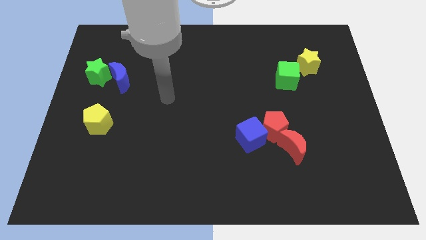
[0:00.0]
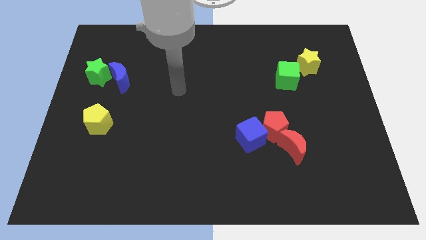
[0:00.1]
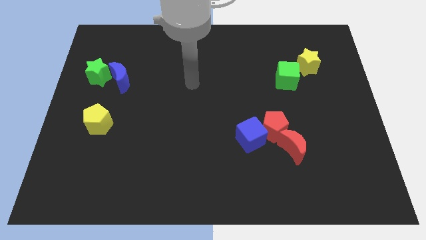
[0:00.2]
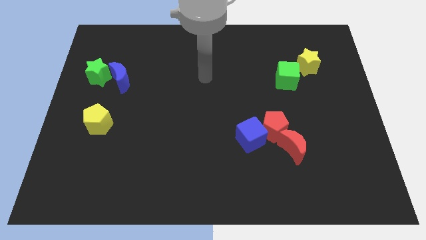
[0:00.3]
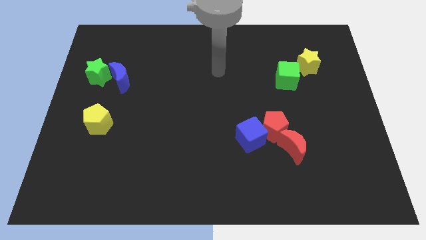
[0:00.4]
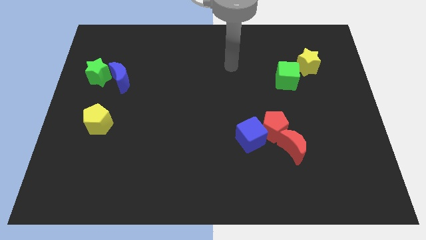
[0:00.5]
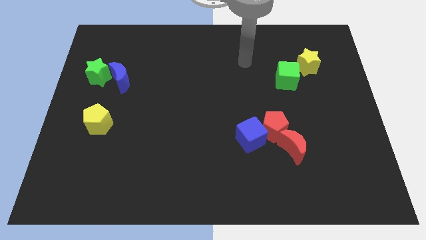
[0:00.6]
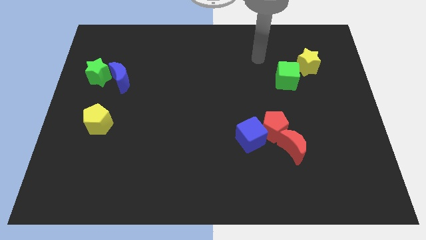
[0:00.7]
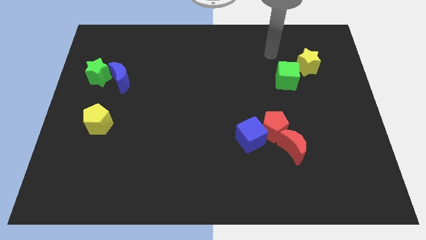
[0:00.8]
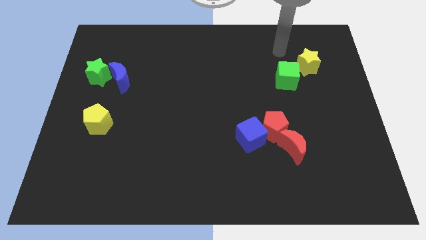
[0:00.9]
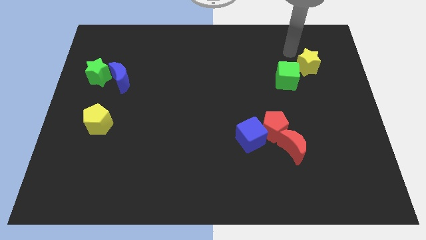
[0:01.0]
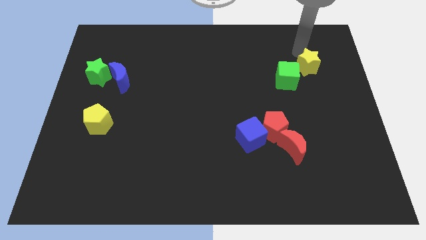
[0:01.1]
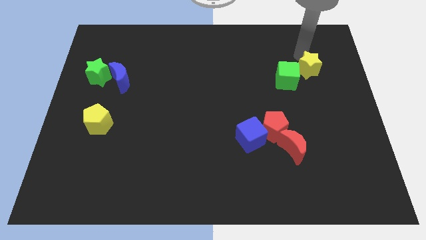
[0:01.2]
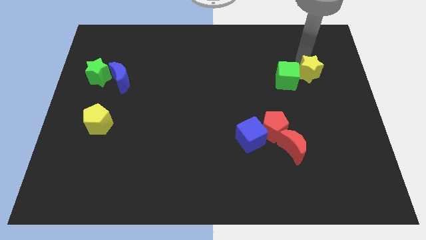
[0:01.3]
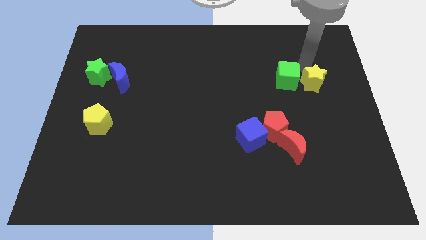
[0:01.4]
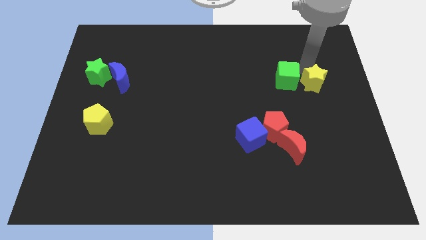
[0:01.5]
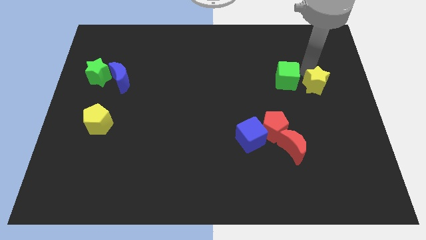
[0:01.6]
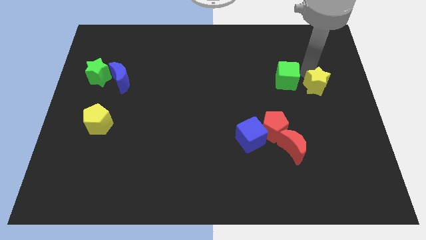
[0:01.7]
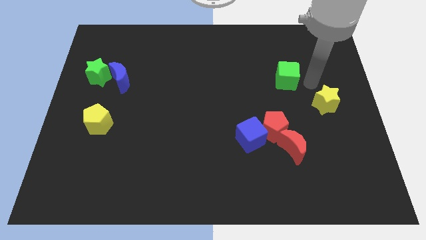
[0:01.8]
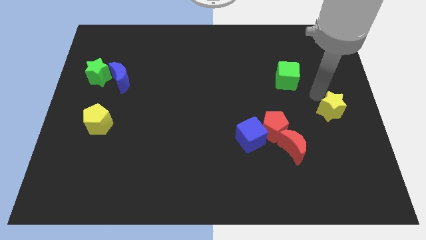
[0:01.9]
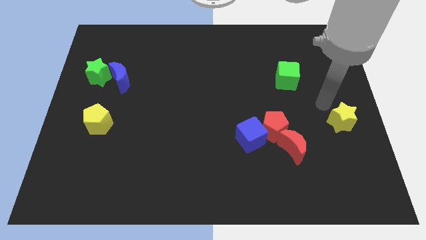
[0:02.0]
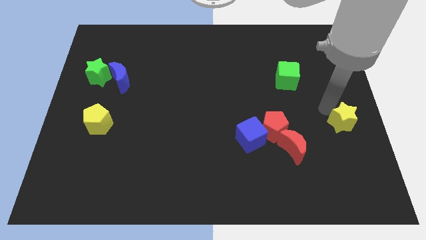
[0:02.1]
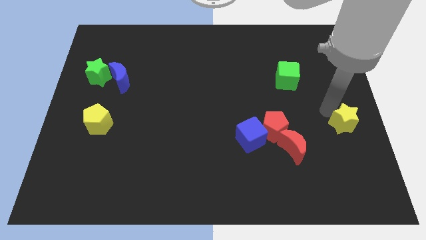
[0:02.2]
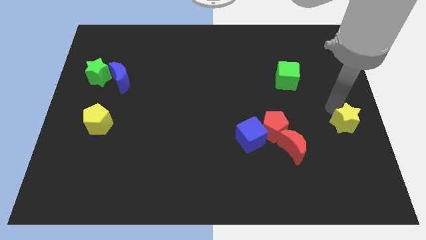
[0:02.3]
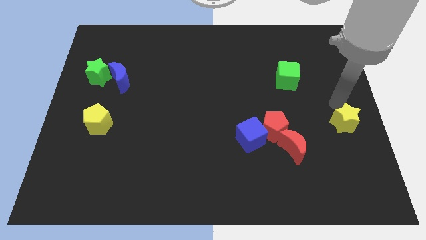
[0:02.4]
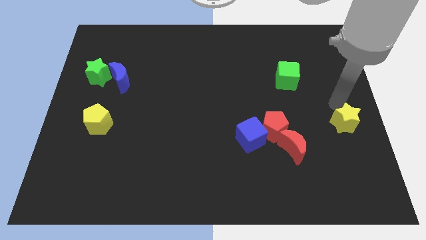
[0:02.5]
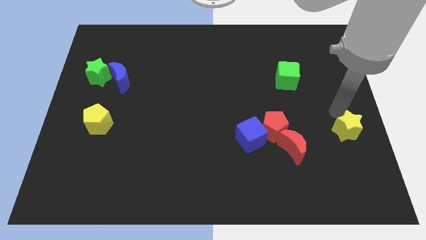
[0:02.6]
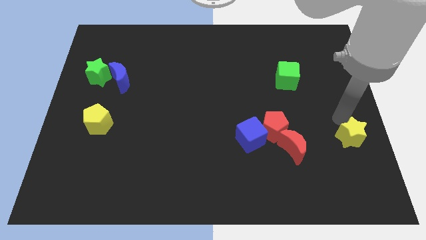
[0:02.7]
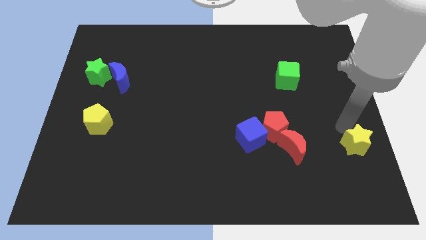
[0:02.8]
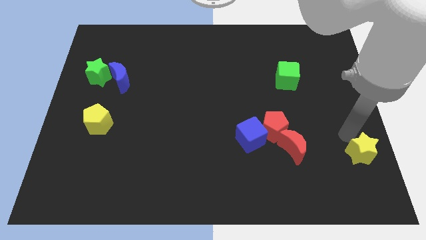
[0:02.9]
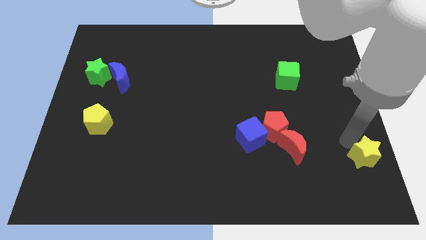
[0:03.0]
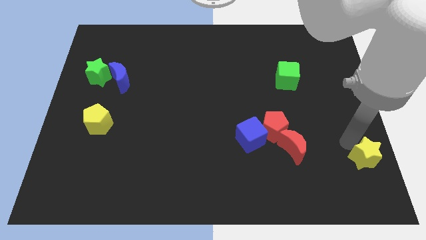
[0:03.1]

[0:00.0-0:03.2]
place the yellow star right to the red moon

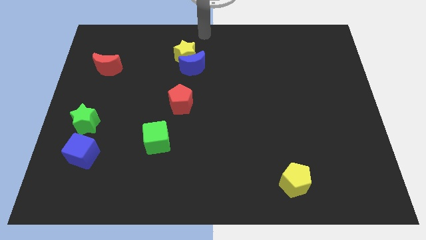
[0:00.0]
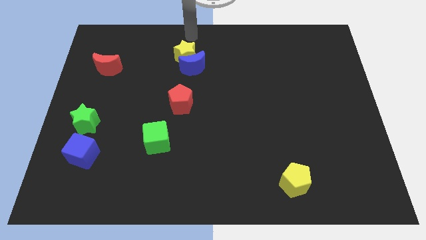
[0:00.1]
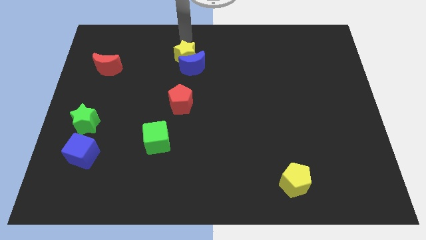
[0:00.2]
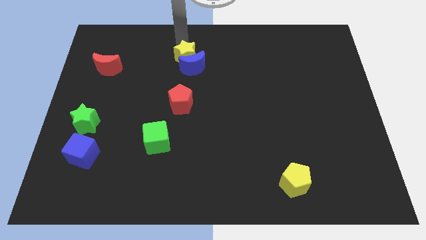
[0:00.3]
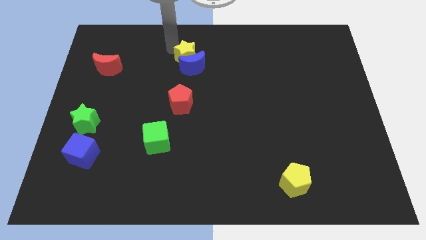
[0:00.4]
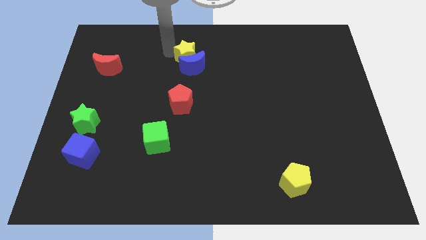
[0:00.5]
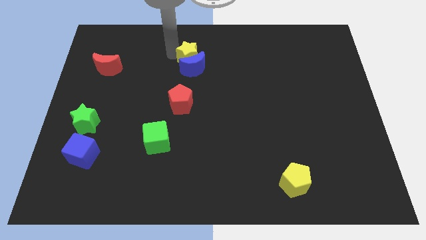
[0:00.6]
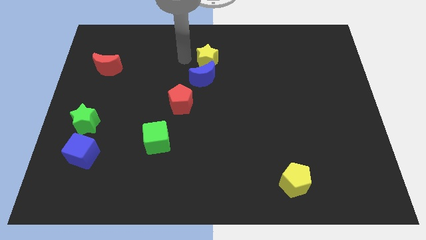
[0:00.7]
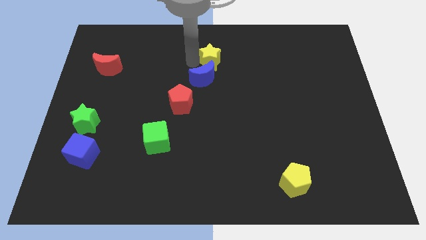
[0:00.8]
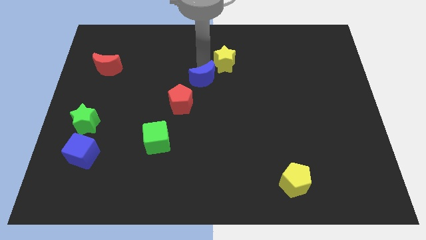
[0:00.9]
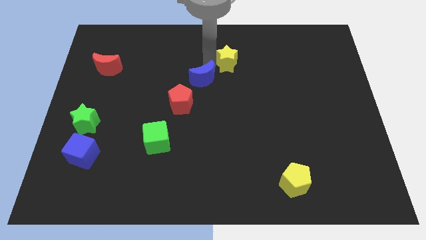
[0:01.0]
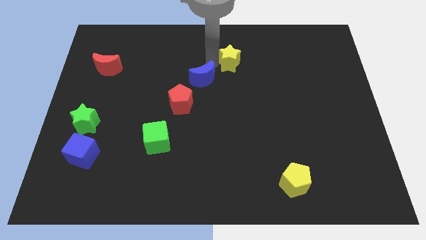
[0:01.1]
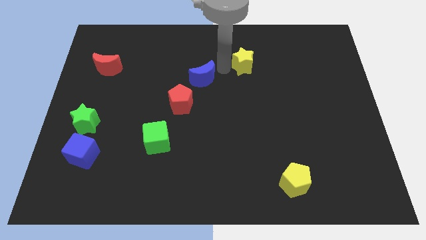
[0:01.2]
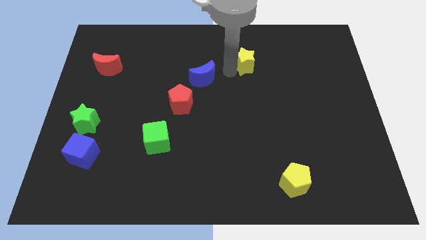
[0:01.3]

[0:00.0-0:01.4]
separate yellow star from blue moon

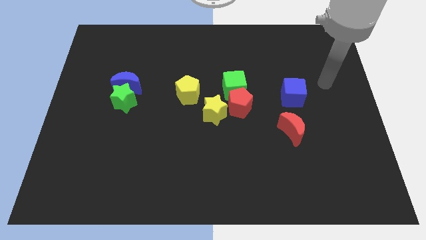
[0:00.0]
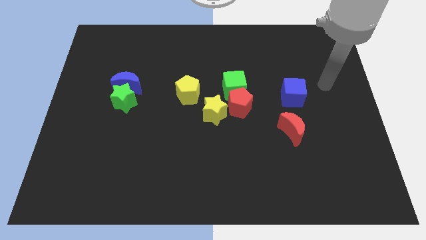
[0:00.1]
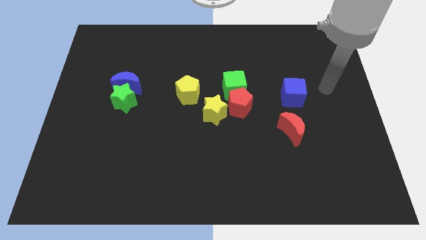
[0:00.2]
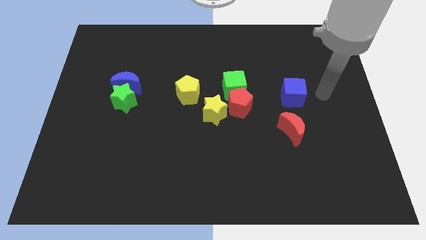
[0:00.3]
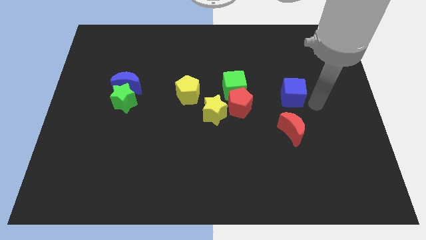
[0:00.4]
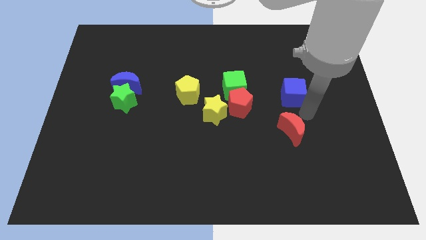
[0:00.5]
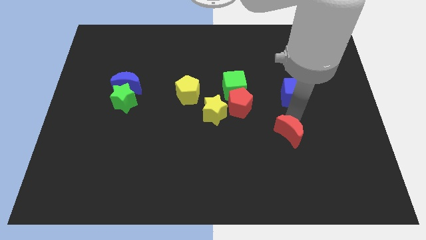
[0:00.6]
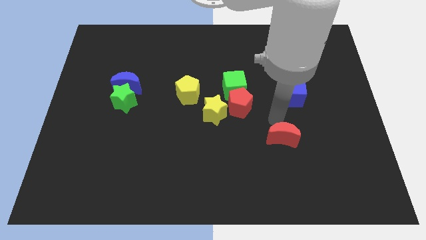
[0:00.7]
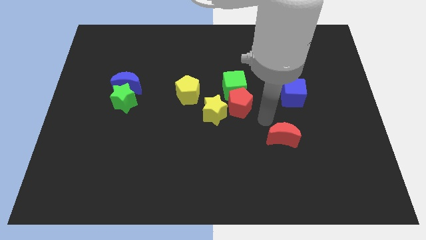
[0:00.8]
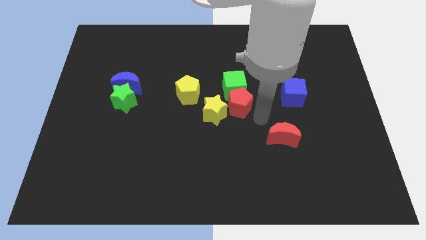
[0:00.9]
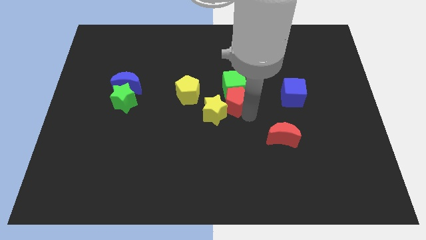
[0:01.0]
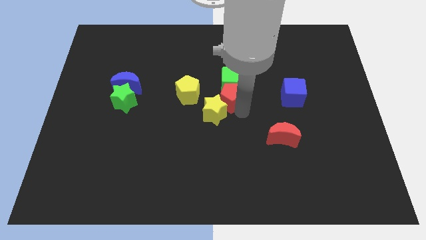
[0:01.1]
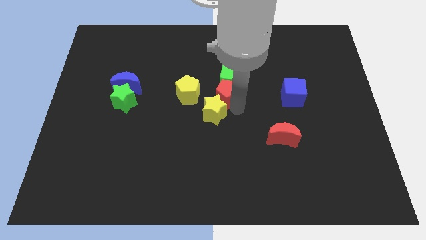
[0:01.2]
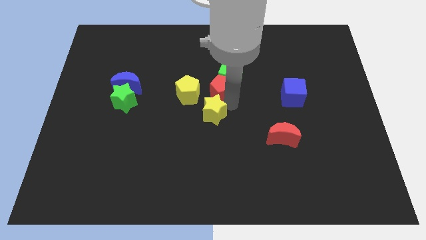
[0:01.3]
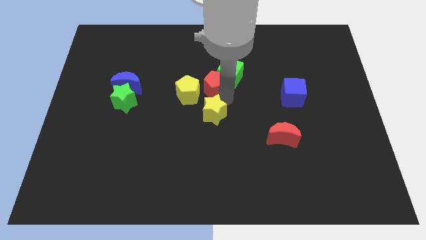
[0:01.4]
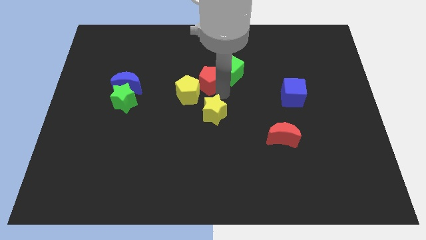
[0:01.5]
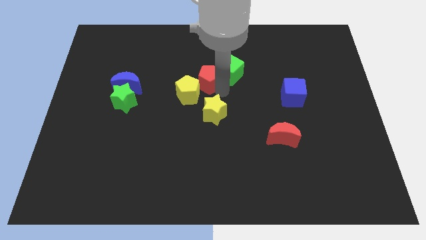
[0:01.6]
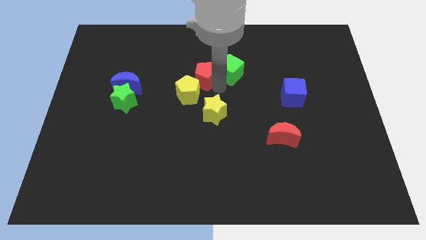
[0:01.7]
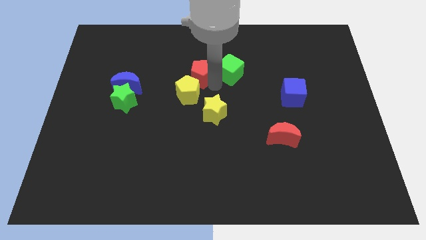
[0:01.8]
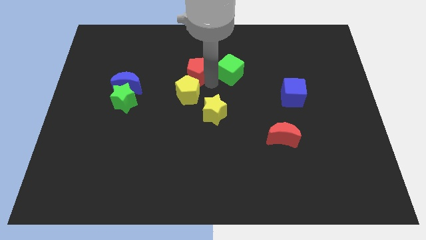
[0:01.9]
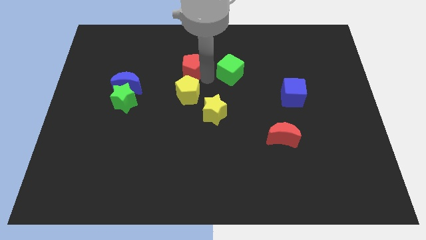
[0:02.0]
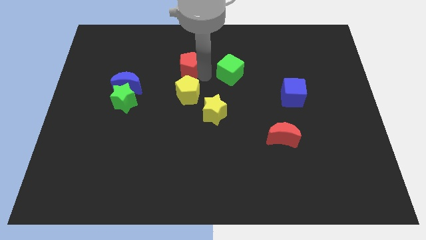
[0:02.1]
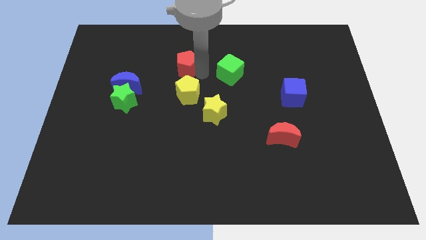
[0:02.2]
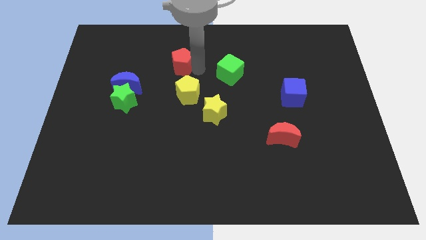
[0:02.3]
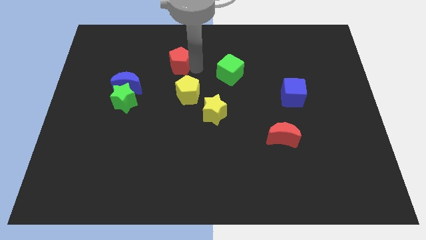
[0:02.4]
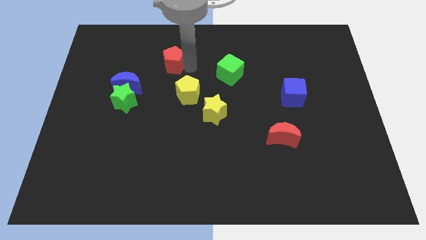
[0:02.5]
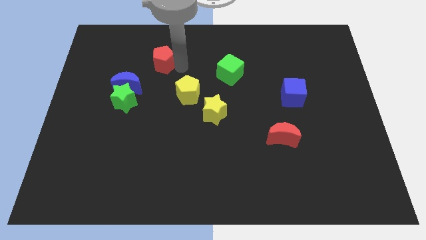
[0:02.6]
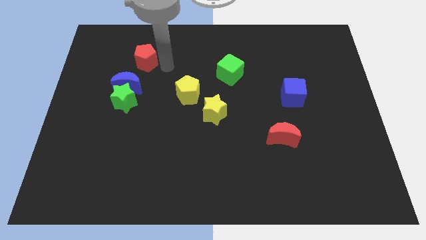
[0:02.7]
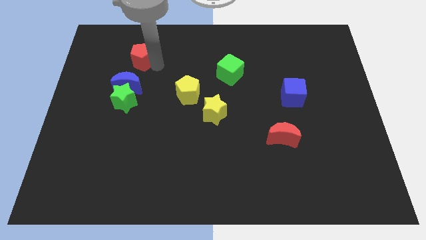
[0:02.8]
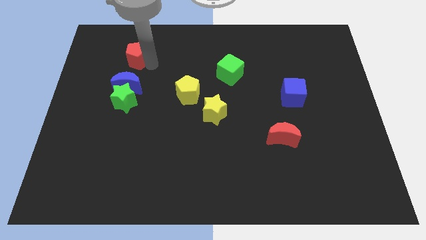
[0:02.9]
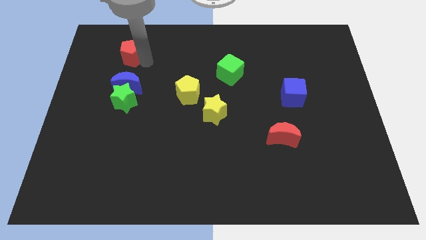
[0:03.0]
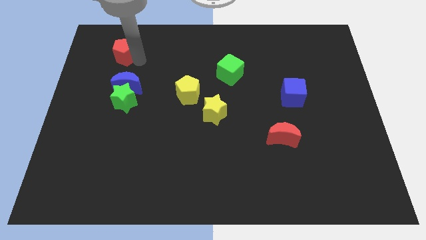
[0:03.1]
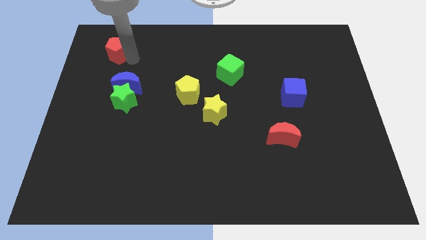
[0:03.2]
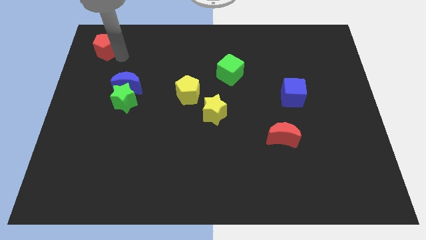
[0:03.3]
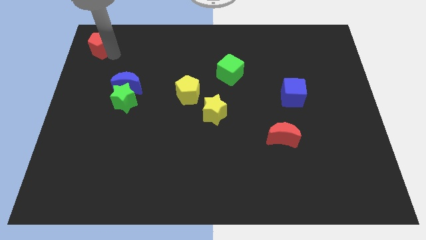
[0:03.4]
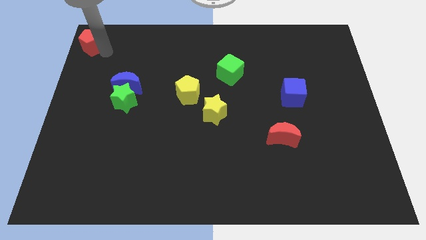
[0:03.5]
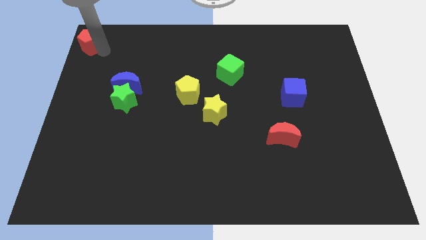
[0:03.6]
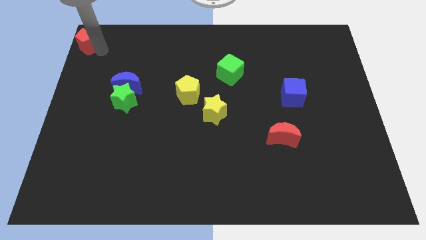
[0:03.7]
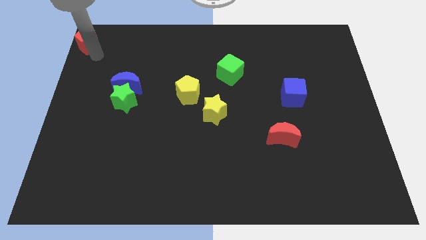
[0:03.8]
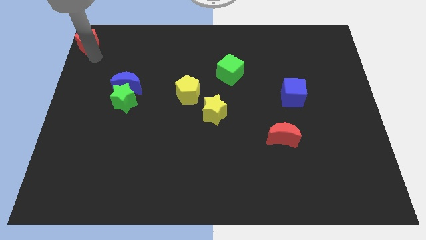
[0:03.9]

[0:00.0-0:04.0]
push the red pentagon towards the top left side of the board

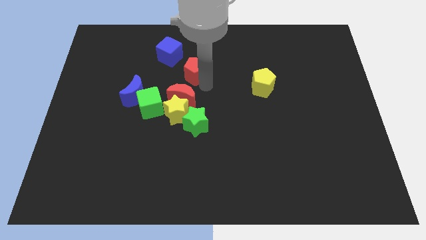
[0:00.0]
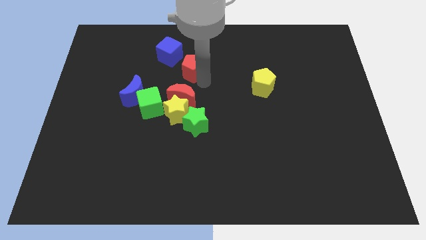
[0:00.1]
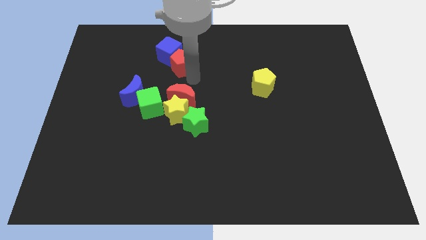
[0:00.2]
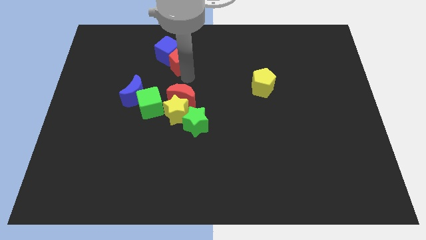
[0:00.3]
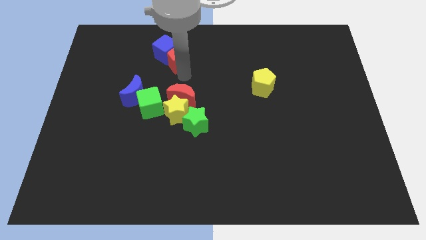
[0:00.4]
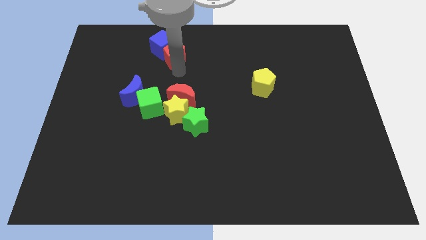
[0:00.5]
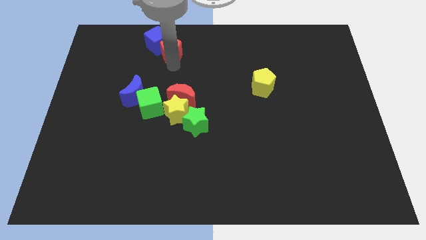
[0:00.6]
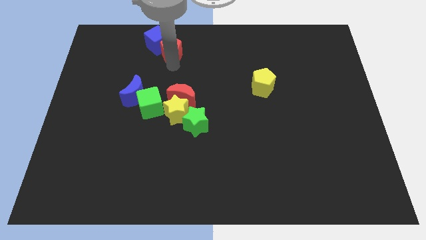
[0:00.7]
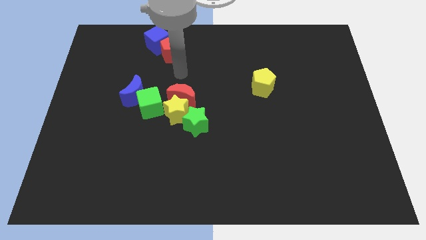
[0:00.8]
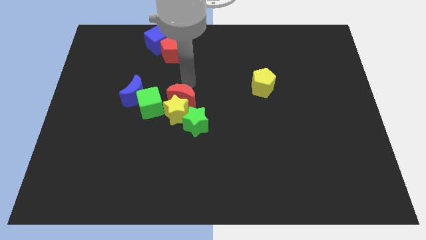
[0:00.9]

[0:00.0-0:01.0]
push the red pentagon along with the blue cube slightly to the top
